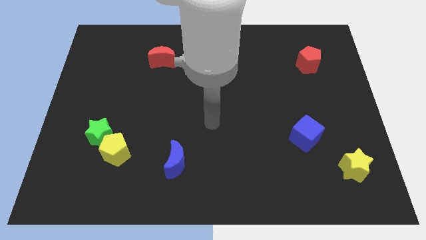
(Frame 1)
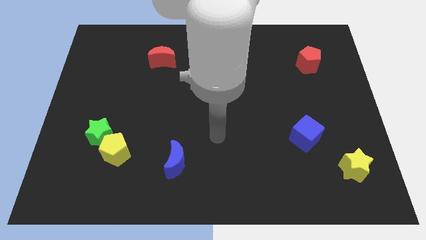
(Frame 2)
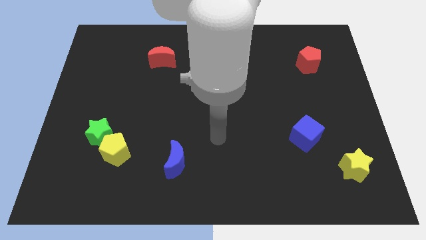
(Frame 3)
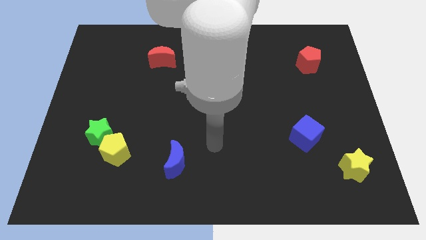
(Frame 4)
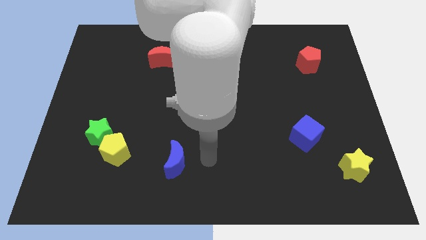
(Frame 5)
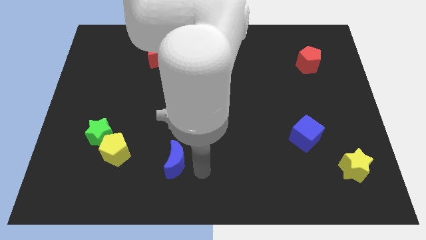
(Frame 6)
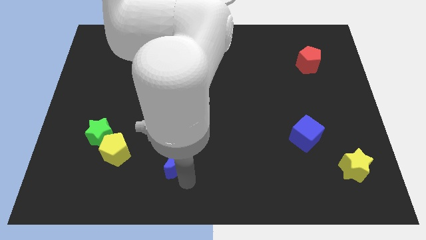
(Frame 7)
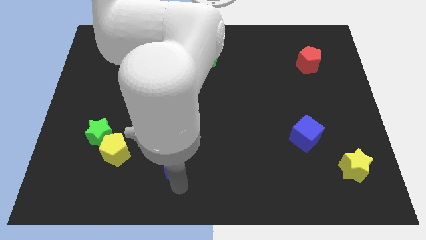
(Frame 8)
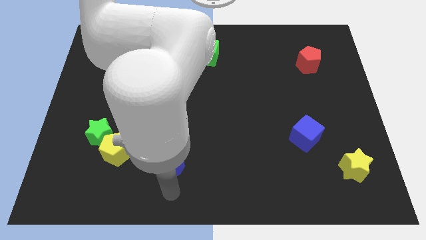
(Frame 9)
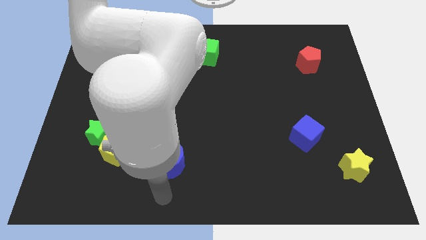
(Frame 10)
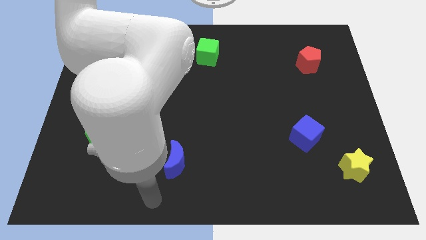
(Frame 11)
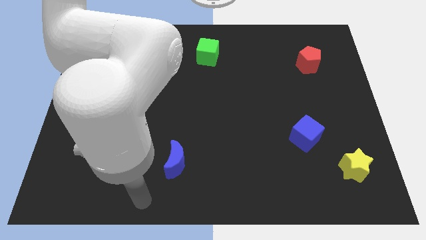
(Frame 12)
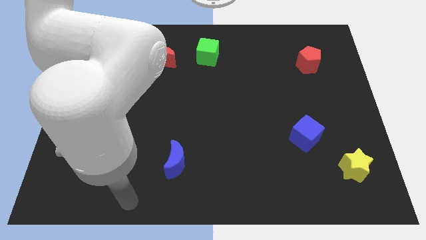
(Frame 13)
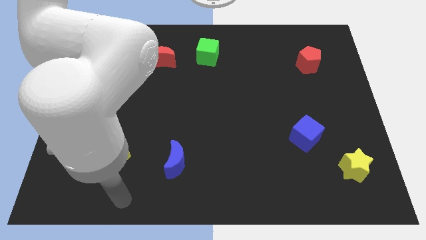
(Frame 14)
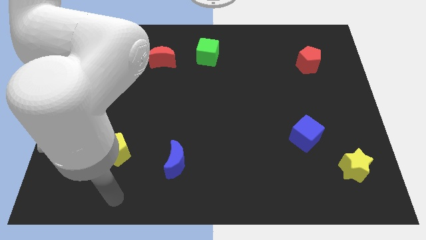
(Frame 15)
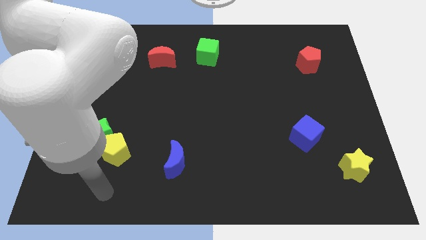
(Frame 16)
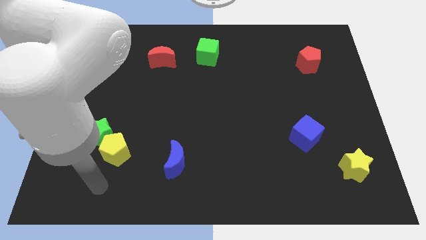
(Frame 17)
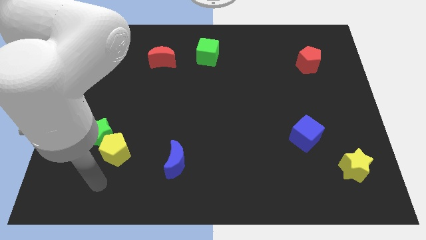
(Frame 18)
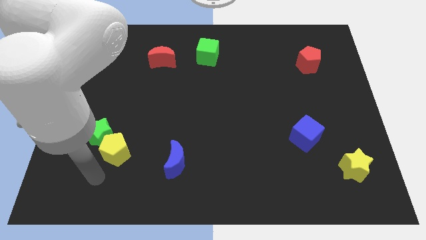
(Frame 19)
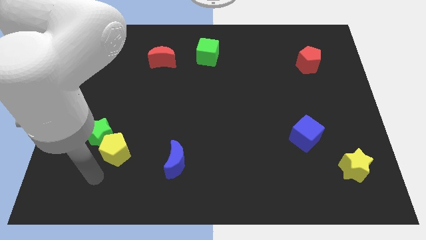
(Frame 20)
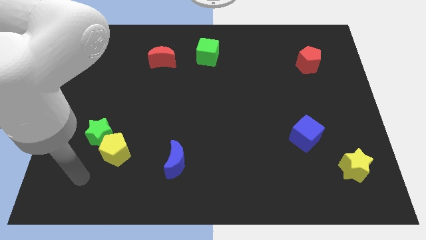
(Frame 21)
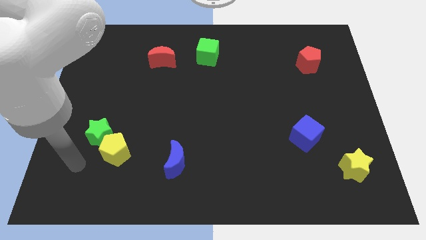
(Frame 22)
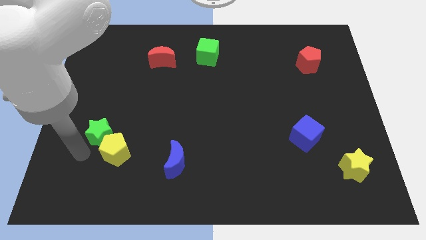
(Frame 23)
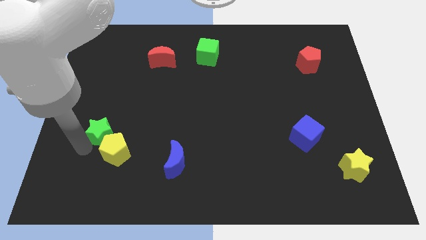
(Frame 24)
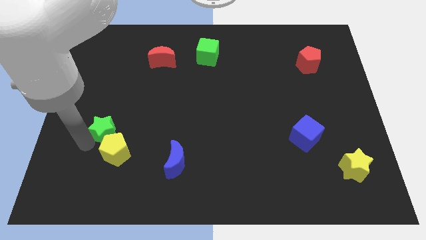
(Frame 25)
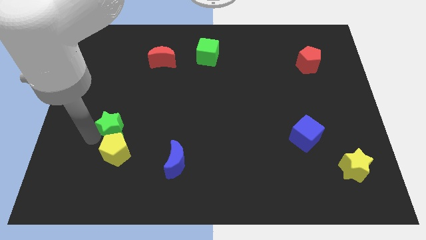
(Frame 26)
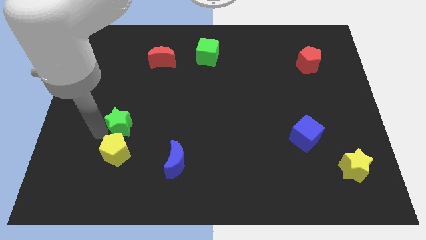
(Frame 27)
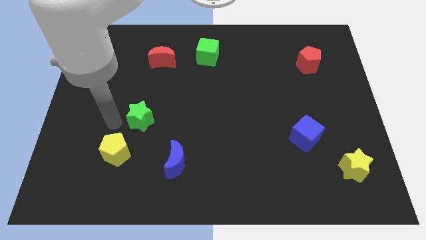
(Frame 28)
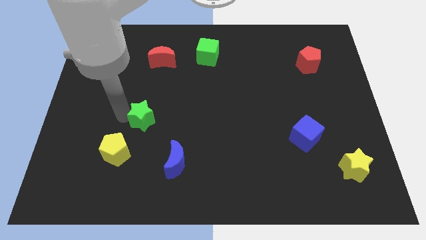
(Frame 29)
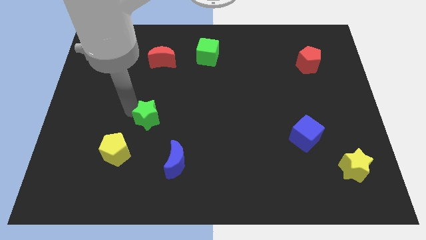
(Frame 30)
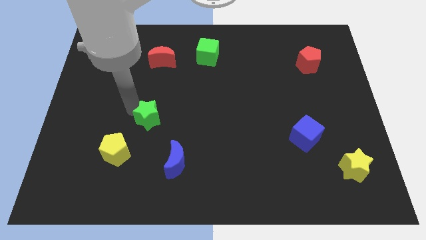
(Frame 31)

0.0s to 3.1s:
place the green star in between the green cube and yellow pentagon

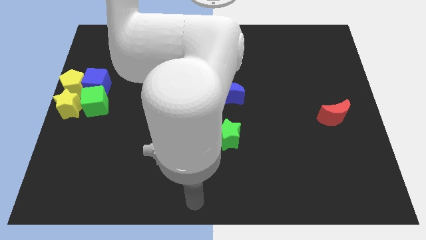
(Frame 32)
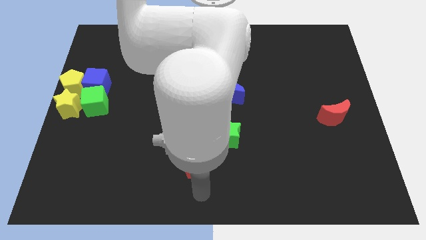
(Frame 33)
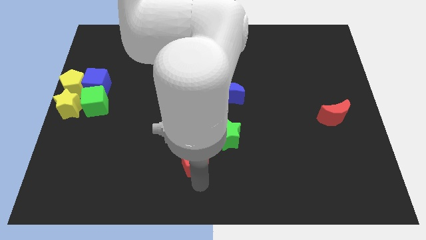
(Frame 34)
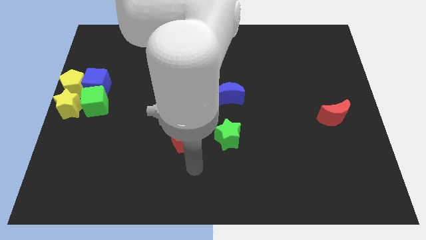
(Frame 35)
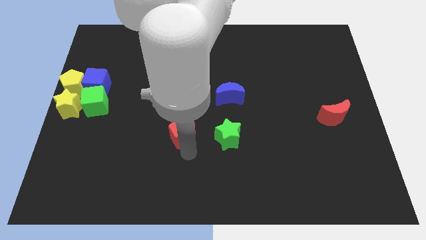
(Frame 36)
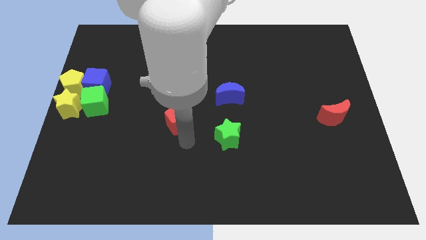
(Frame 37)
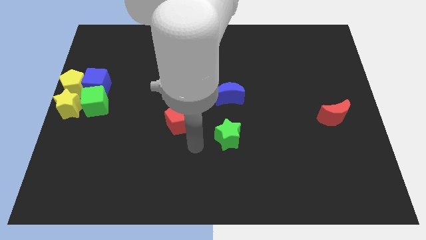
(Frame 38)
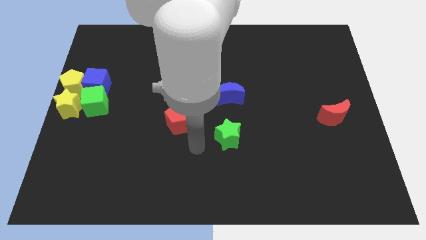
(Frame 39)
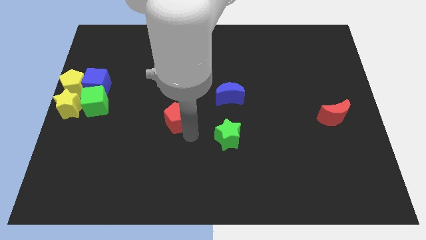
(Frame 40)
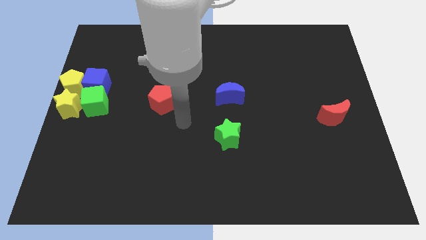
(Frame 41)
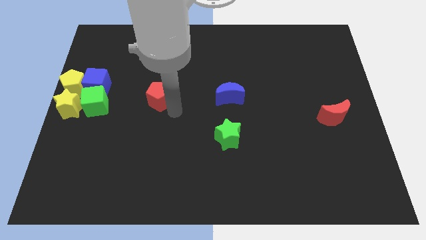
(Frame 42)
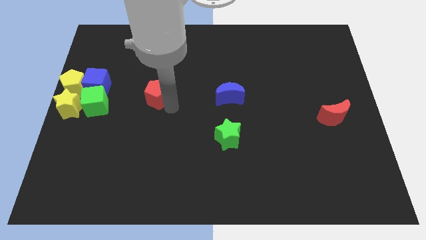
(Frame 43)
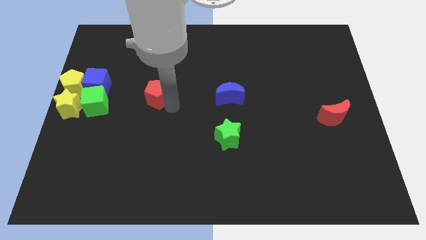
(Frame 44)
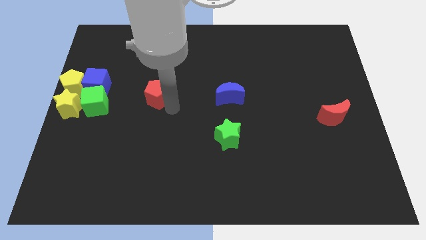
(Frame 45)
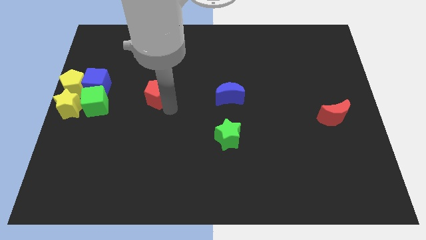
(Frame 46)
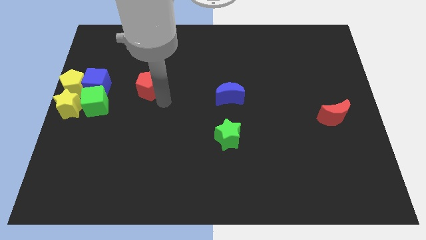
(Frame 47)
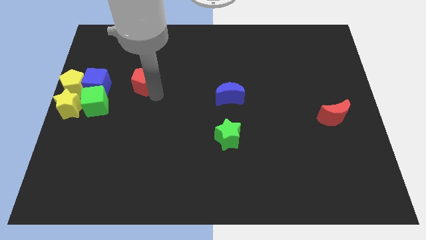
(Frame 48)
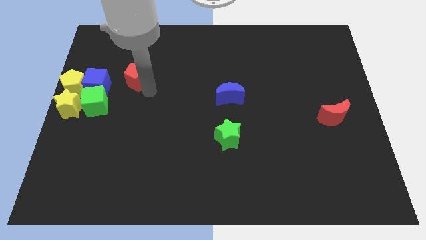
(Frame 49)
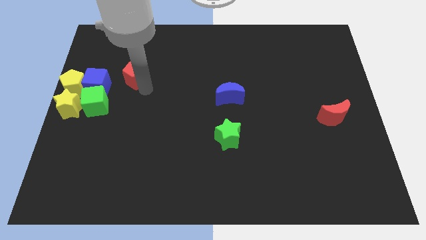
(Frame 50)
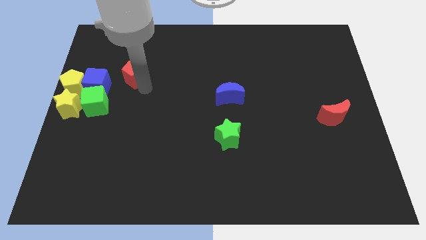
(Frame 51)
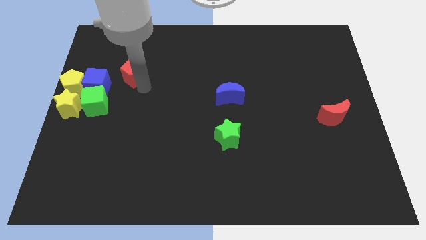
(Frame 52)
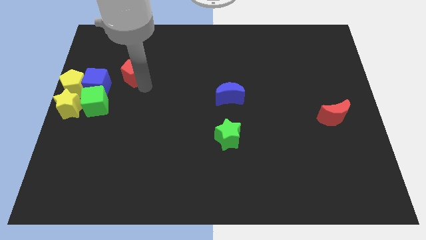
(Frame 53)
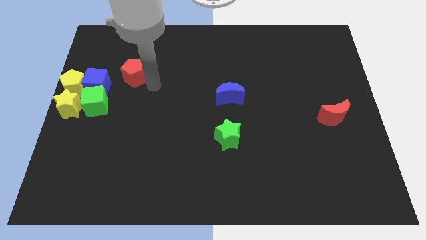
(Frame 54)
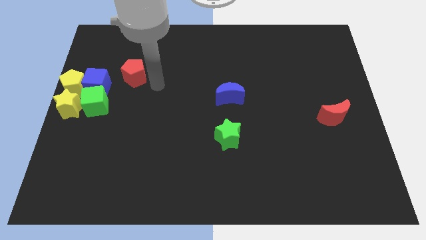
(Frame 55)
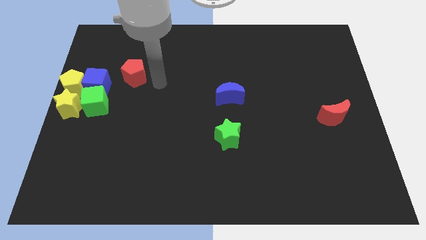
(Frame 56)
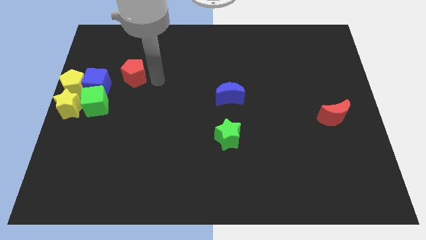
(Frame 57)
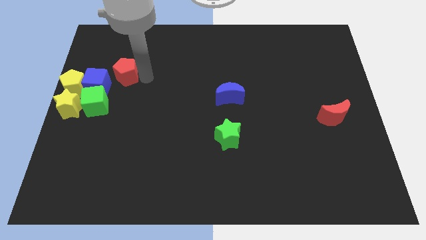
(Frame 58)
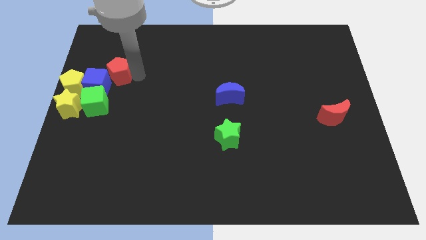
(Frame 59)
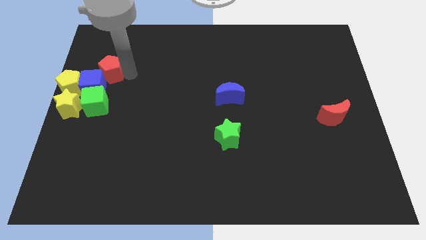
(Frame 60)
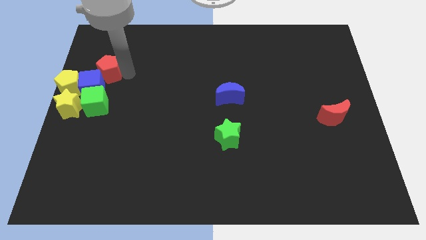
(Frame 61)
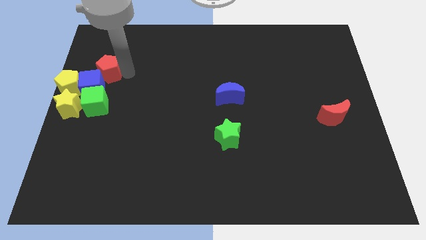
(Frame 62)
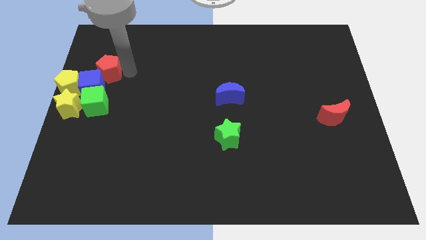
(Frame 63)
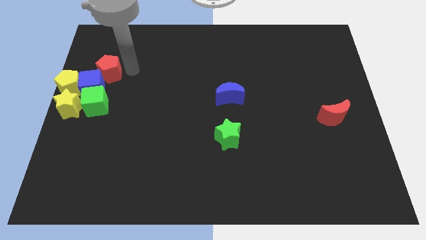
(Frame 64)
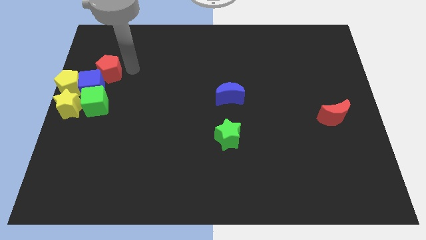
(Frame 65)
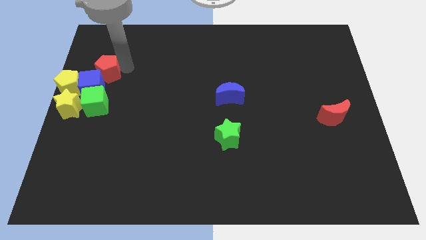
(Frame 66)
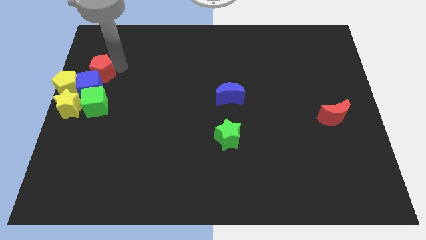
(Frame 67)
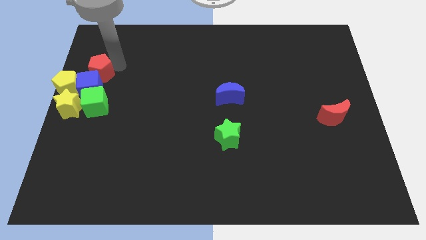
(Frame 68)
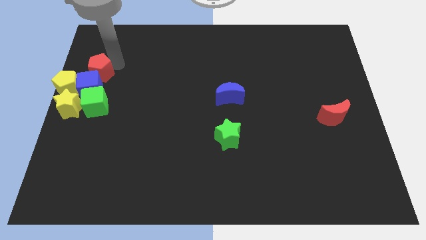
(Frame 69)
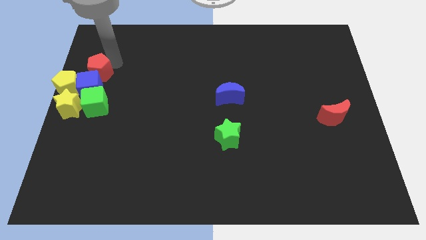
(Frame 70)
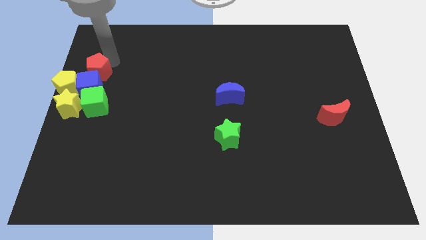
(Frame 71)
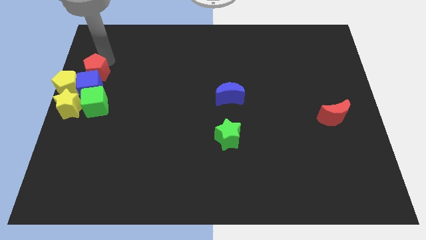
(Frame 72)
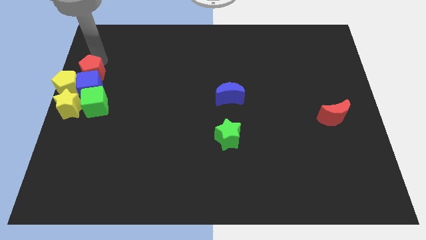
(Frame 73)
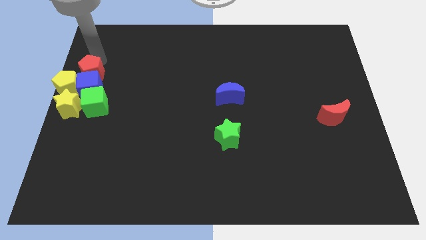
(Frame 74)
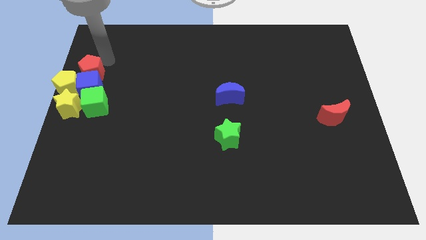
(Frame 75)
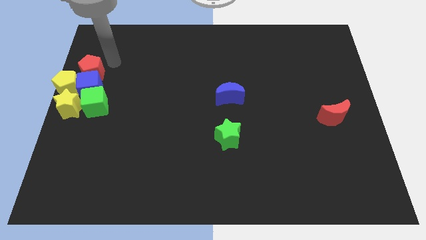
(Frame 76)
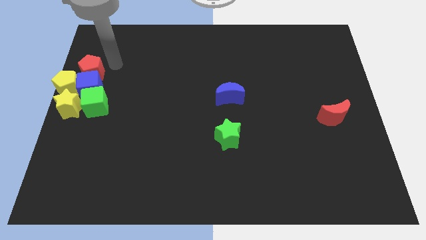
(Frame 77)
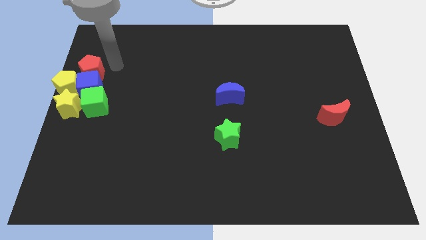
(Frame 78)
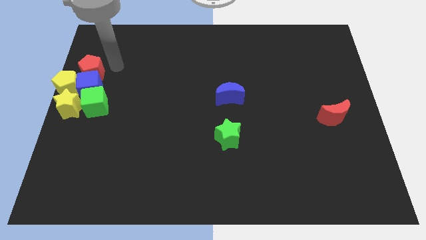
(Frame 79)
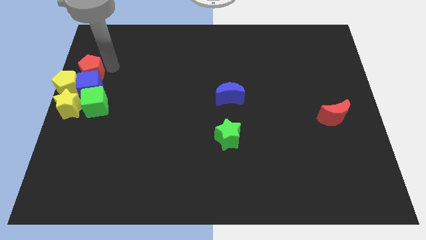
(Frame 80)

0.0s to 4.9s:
push the red pentagon into the blue cube

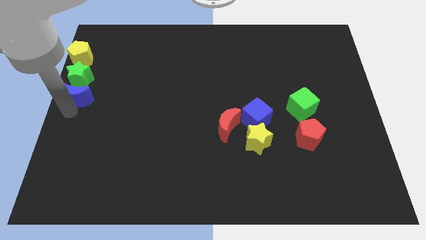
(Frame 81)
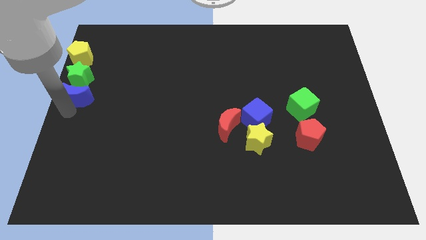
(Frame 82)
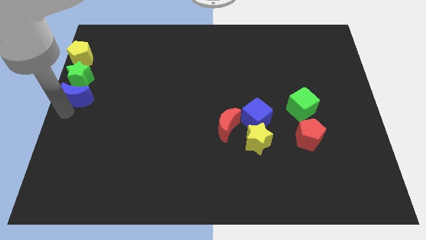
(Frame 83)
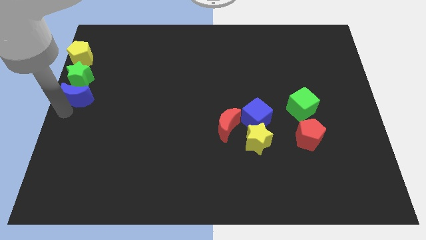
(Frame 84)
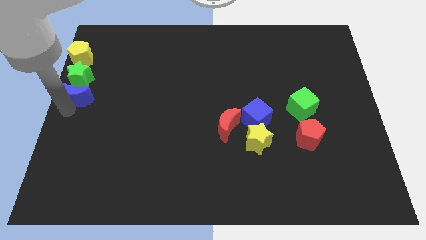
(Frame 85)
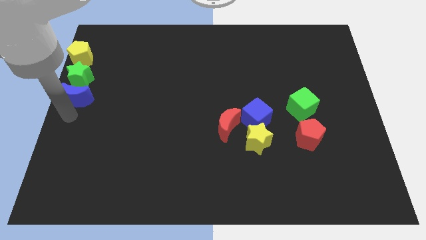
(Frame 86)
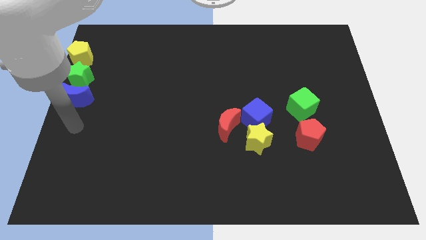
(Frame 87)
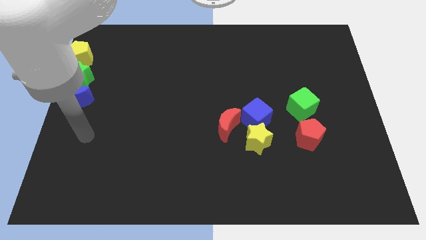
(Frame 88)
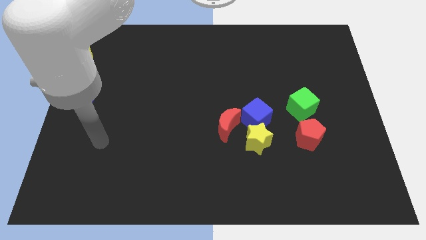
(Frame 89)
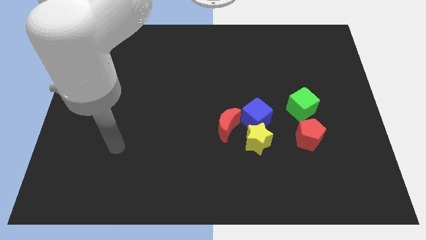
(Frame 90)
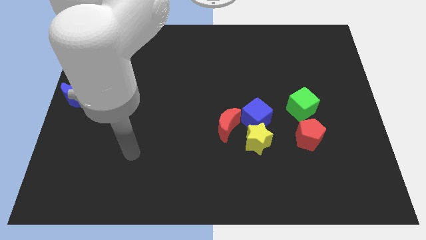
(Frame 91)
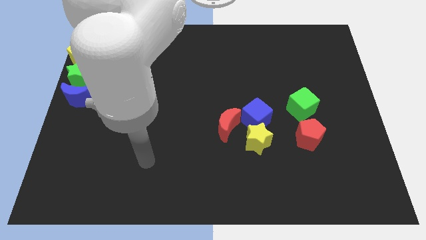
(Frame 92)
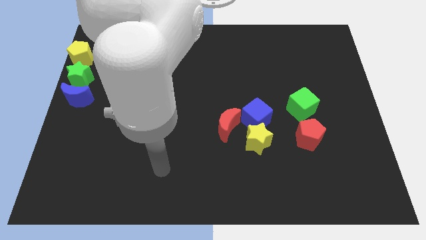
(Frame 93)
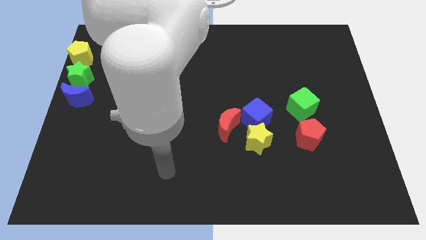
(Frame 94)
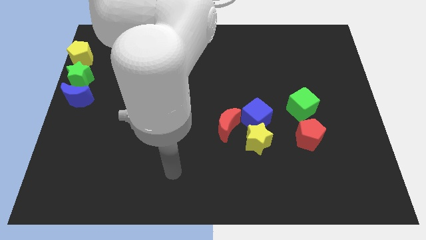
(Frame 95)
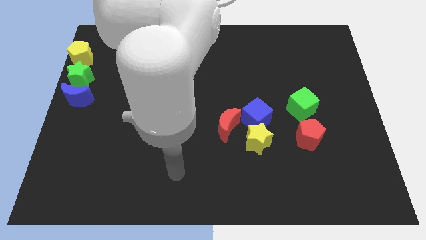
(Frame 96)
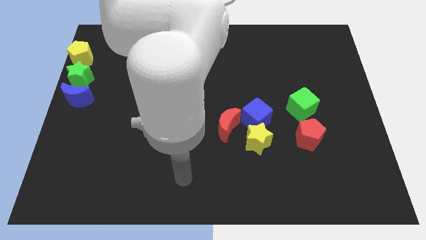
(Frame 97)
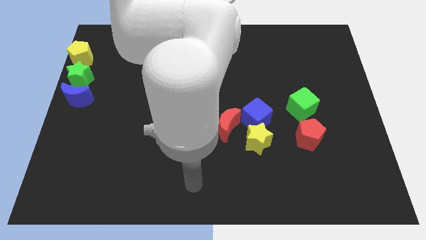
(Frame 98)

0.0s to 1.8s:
move your arm towards the bottom center of the board
